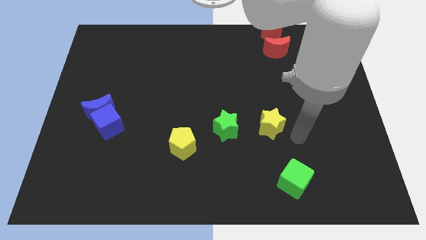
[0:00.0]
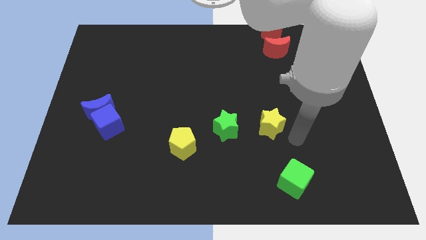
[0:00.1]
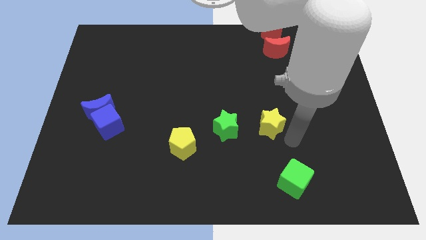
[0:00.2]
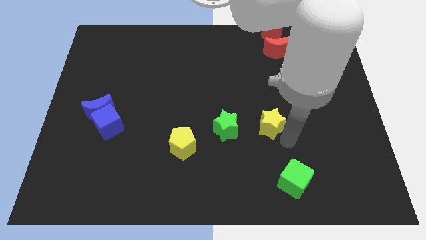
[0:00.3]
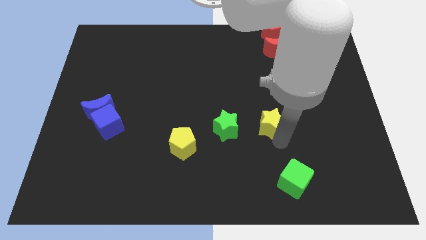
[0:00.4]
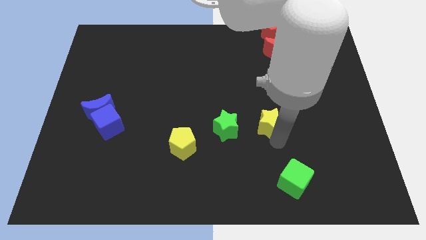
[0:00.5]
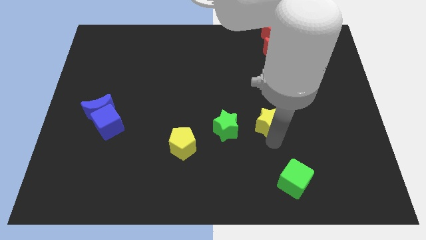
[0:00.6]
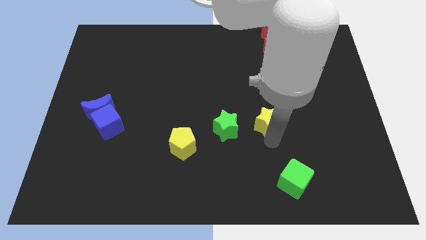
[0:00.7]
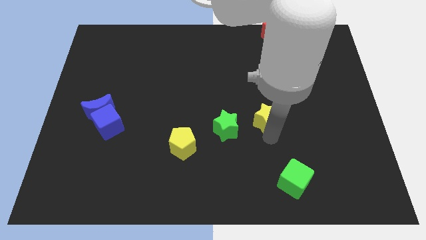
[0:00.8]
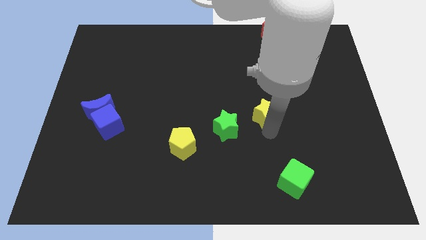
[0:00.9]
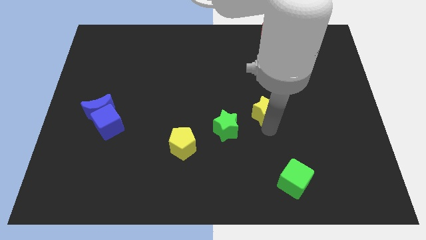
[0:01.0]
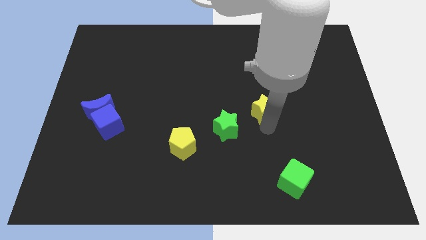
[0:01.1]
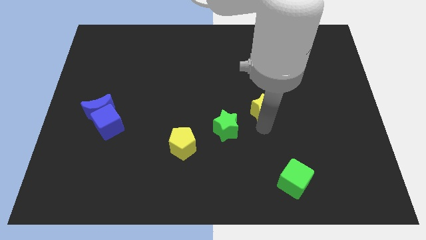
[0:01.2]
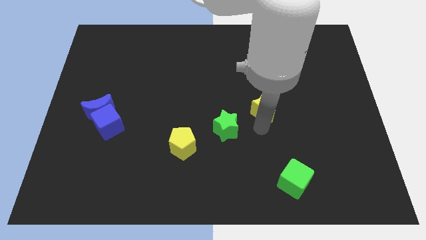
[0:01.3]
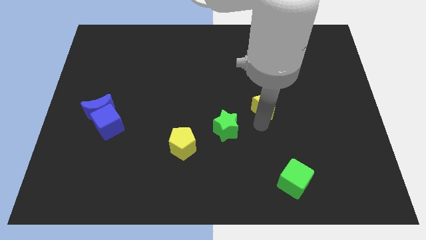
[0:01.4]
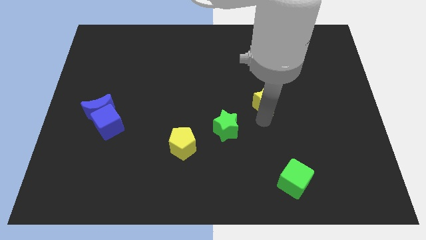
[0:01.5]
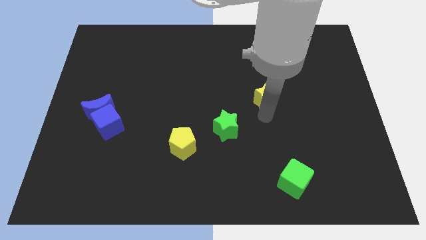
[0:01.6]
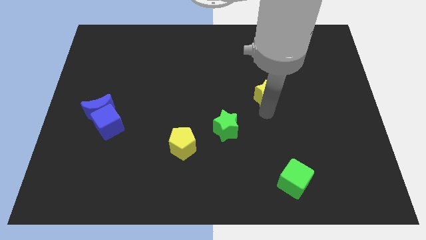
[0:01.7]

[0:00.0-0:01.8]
push the yellow star slightly to the top

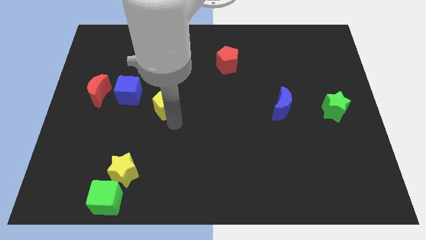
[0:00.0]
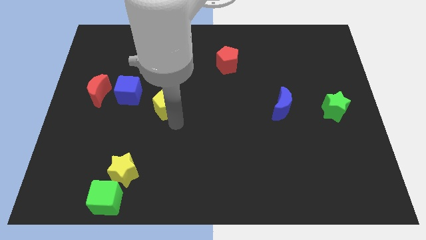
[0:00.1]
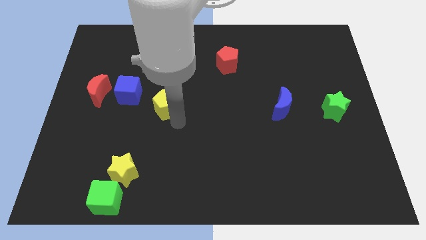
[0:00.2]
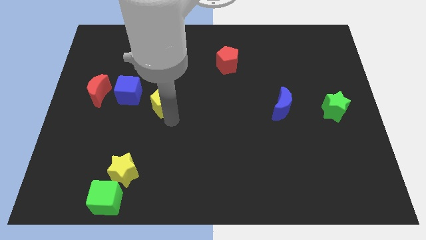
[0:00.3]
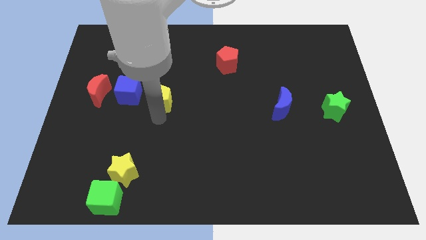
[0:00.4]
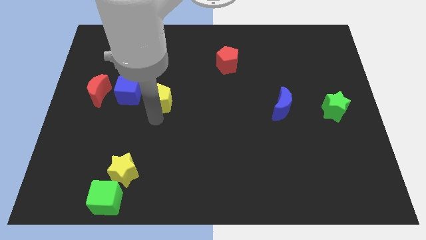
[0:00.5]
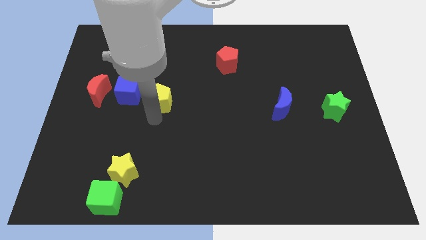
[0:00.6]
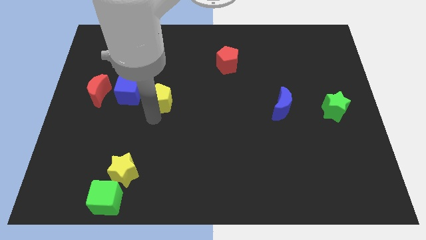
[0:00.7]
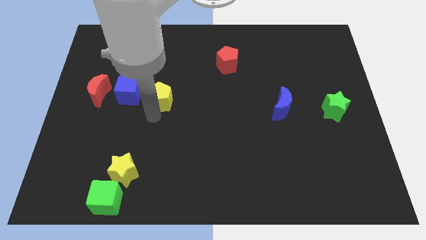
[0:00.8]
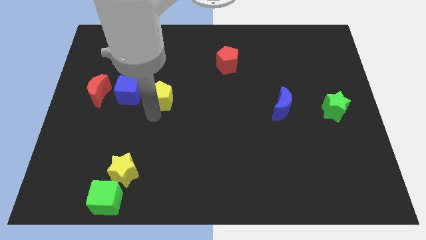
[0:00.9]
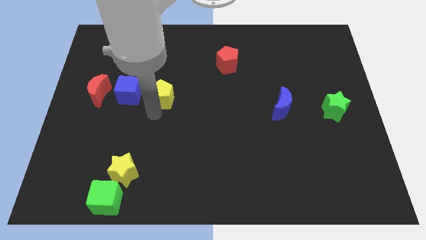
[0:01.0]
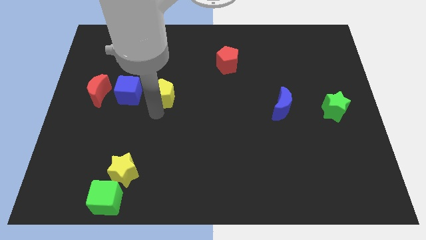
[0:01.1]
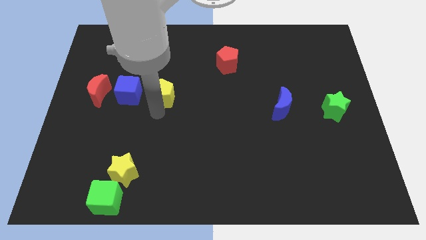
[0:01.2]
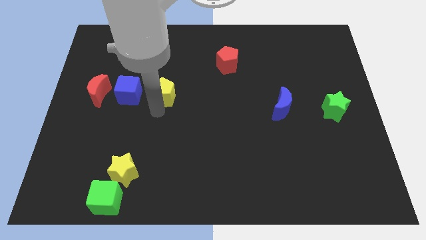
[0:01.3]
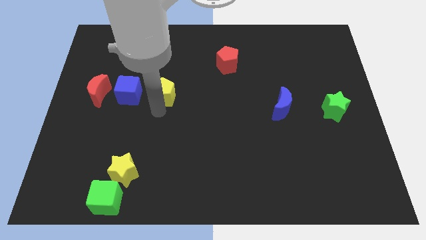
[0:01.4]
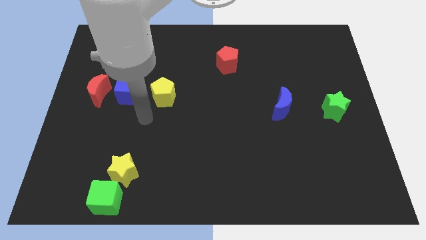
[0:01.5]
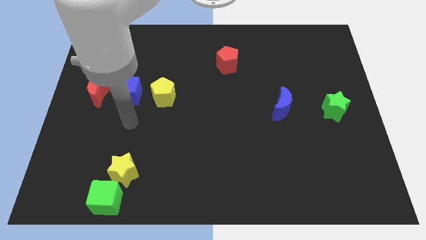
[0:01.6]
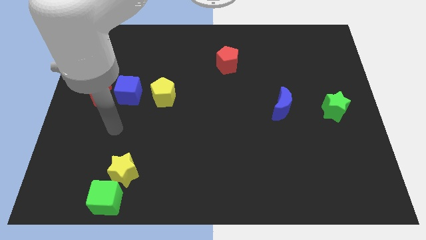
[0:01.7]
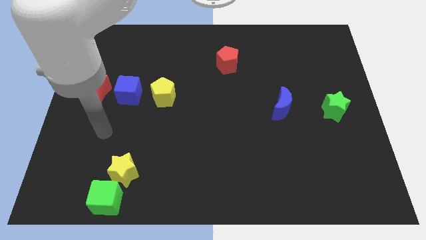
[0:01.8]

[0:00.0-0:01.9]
place the yellow pentagon to the right of the blue cube

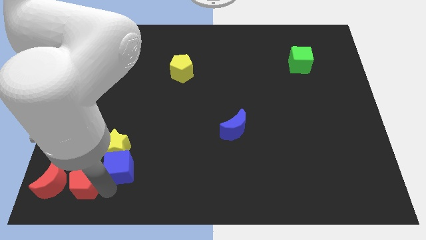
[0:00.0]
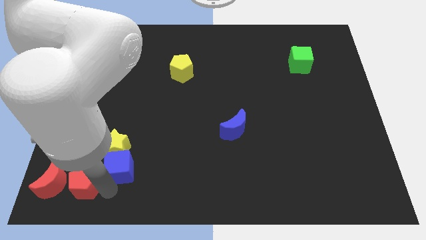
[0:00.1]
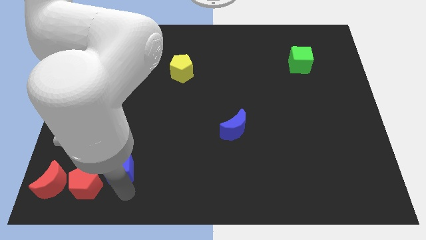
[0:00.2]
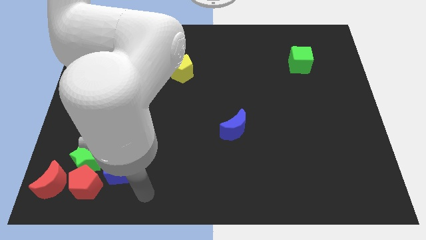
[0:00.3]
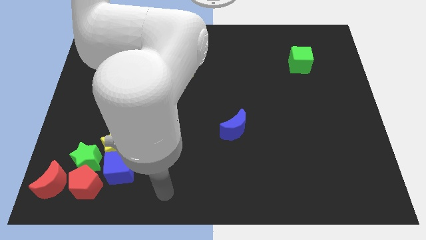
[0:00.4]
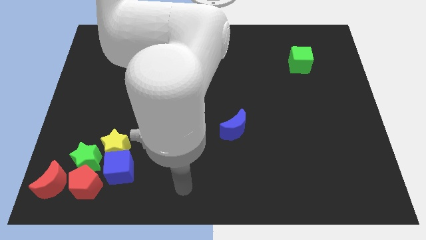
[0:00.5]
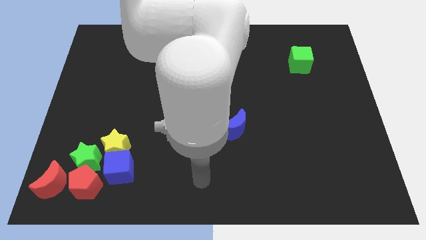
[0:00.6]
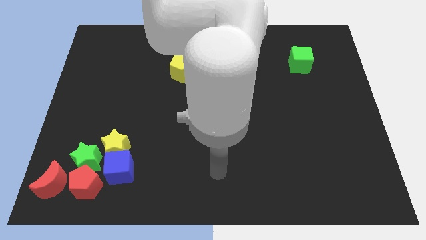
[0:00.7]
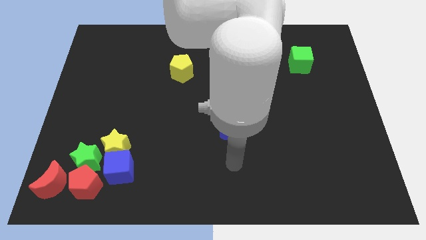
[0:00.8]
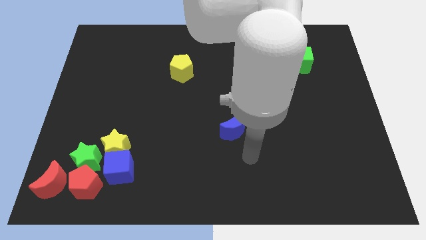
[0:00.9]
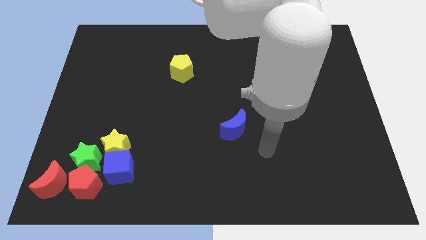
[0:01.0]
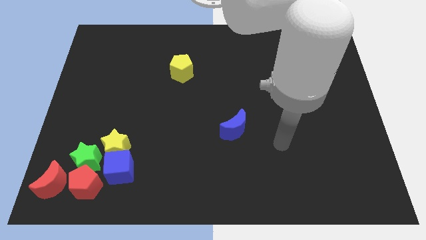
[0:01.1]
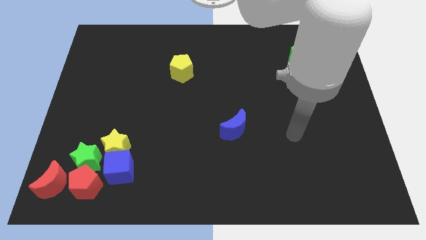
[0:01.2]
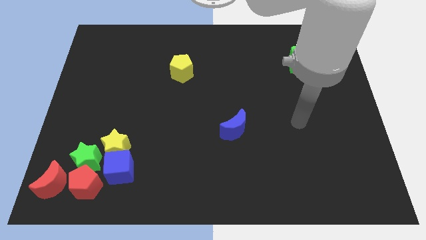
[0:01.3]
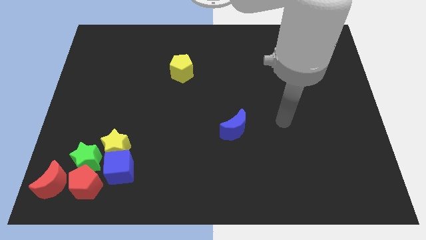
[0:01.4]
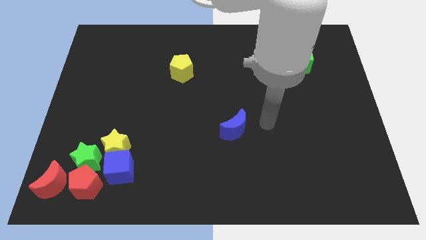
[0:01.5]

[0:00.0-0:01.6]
move arm to the right of blue crescent

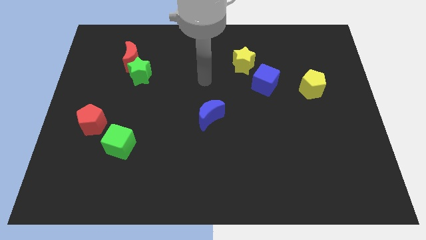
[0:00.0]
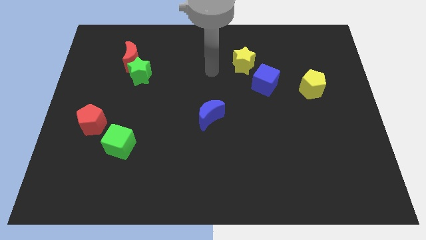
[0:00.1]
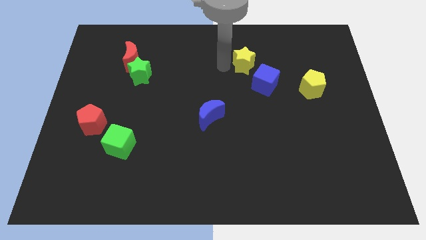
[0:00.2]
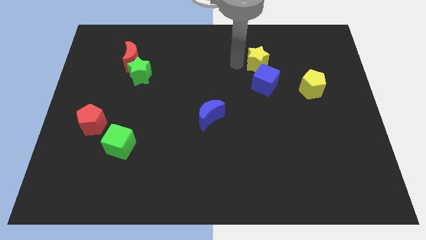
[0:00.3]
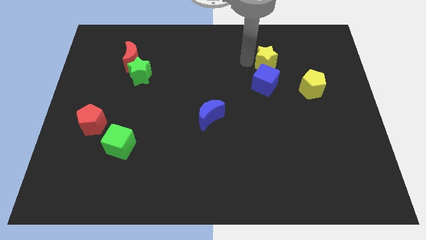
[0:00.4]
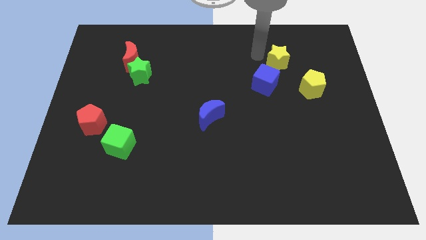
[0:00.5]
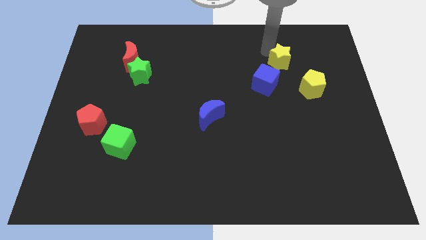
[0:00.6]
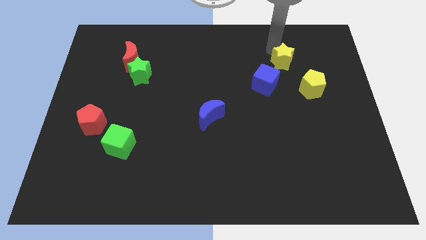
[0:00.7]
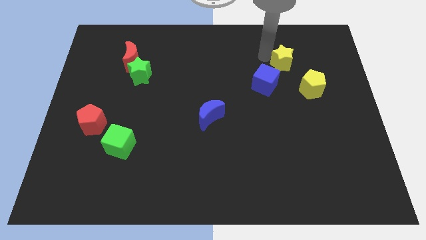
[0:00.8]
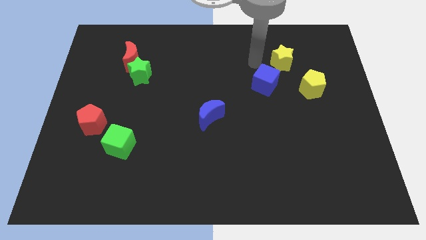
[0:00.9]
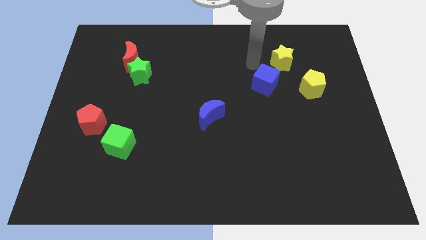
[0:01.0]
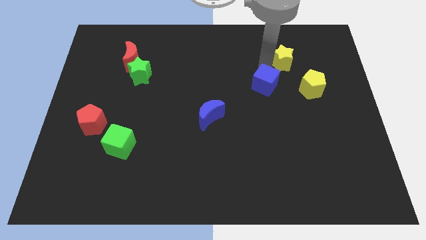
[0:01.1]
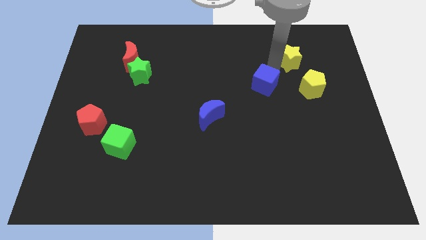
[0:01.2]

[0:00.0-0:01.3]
place yellow star to the top right of yellow pentagon

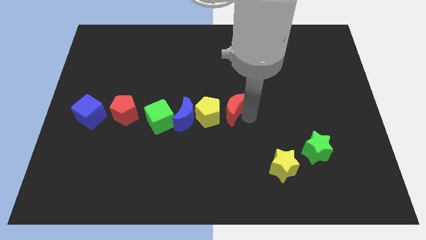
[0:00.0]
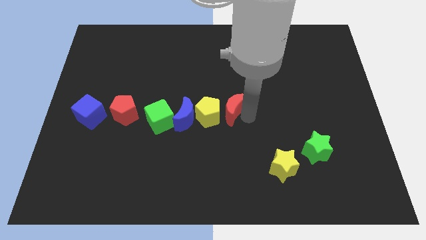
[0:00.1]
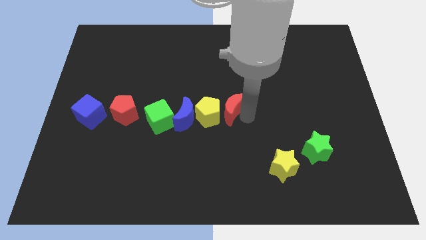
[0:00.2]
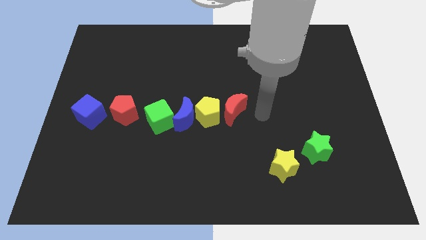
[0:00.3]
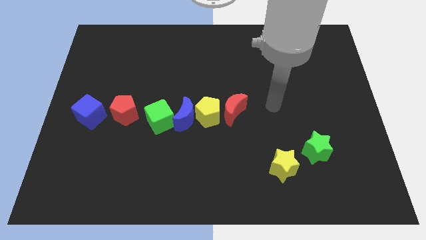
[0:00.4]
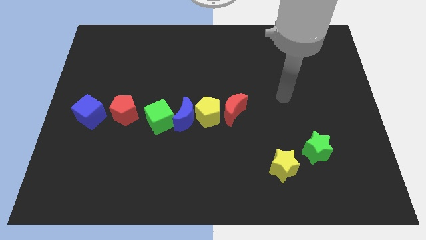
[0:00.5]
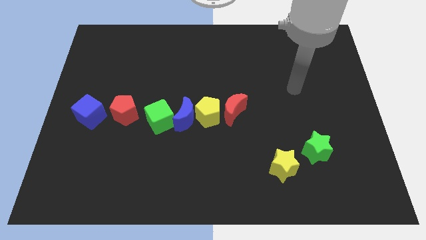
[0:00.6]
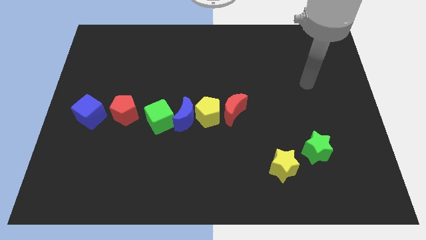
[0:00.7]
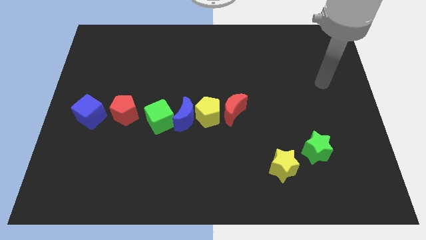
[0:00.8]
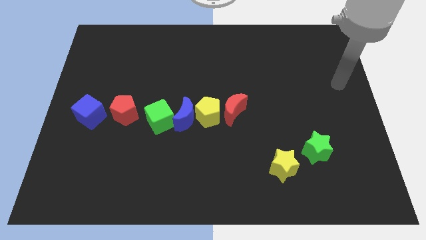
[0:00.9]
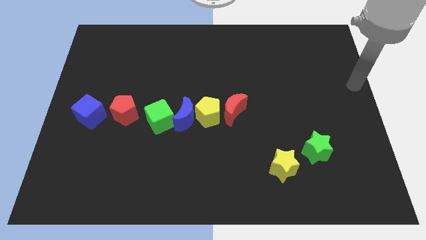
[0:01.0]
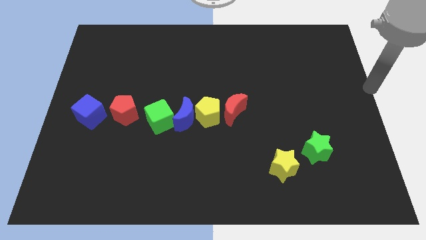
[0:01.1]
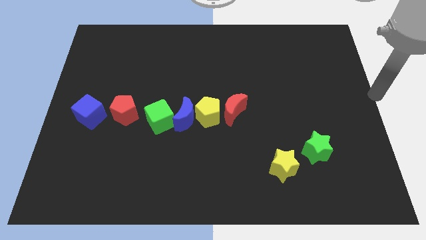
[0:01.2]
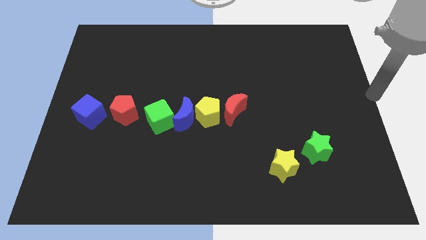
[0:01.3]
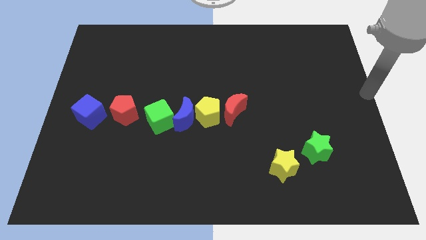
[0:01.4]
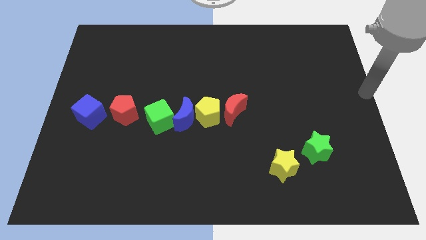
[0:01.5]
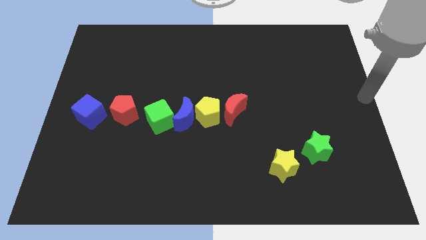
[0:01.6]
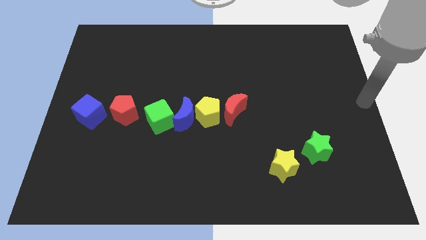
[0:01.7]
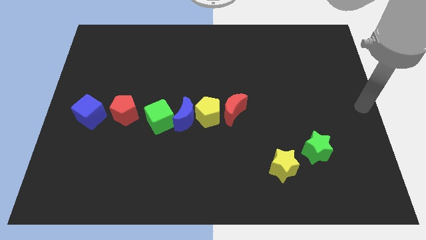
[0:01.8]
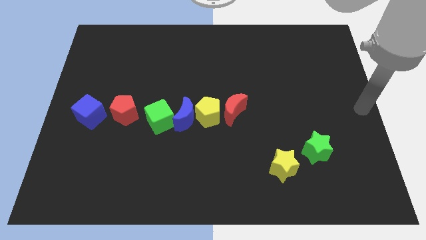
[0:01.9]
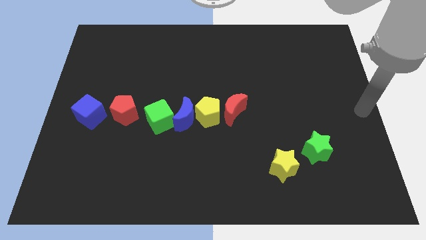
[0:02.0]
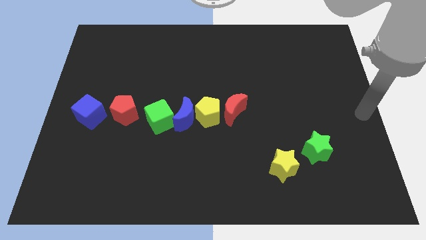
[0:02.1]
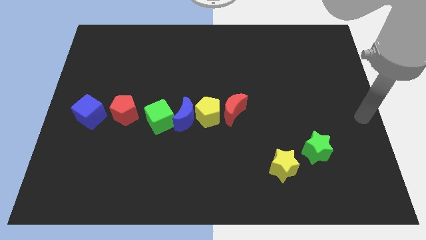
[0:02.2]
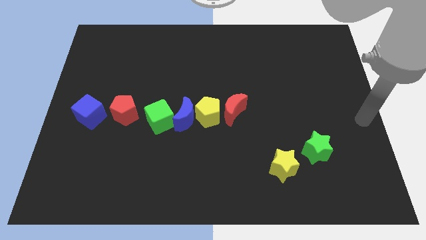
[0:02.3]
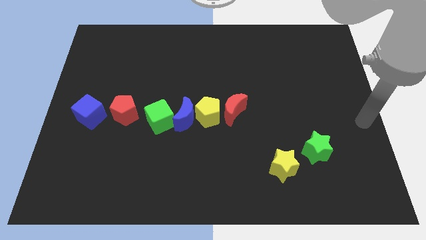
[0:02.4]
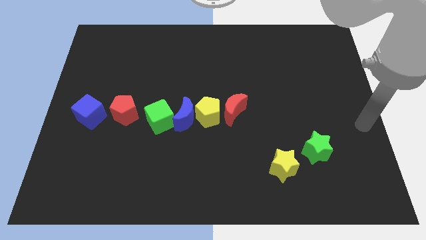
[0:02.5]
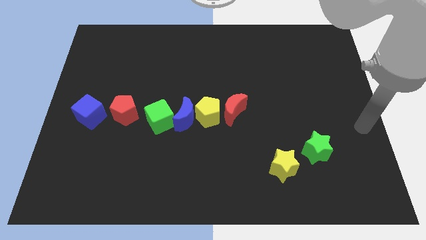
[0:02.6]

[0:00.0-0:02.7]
move arm towards middle right corner of the board
